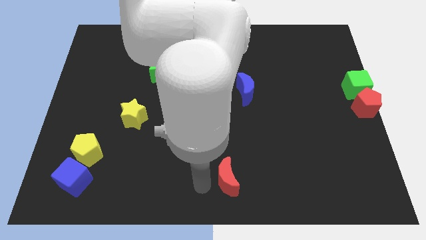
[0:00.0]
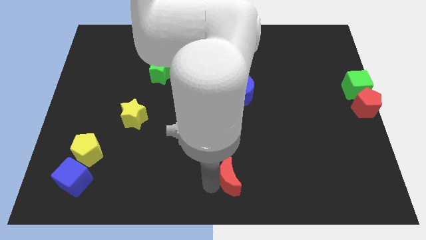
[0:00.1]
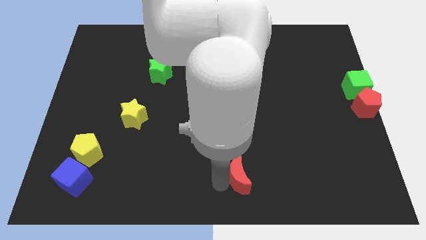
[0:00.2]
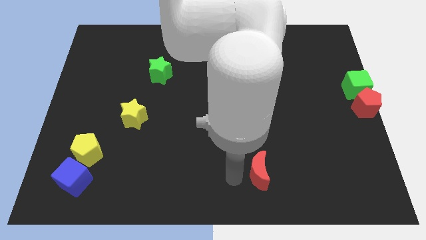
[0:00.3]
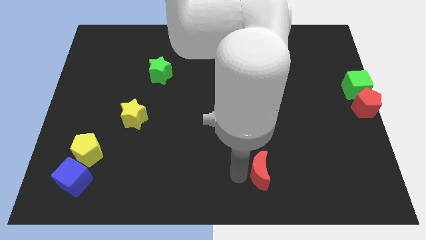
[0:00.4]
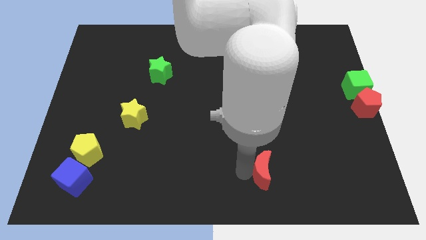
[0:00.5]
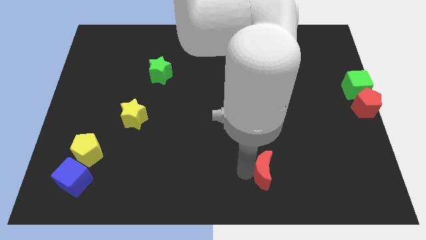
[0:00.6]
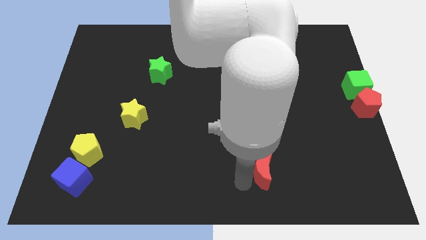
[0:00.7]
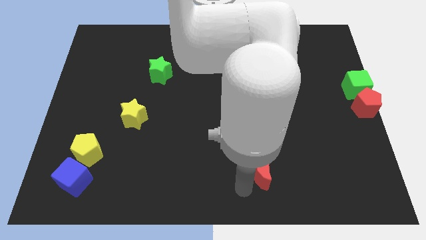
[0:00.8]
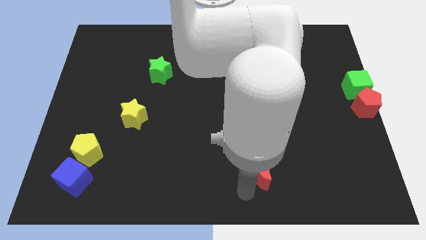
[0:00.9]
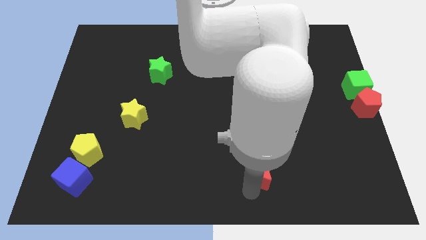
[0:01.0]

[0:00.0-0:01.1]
place the red moon below the blue moon

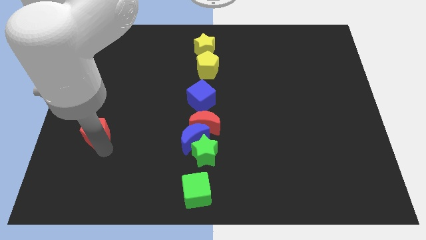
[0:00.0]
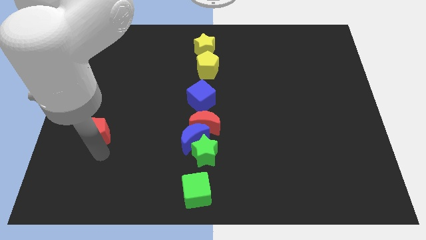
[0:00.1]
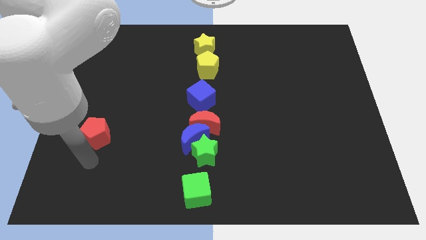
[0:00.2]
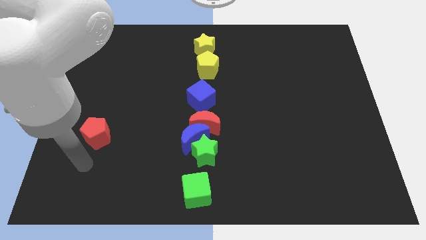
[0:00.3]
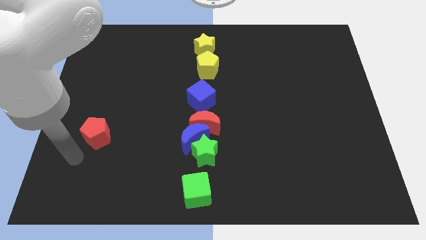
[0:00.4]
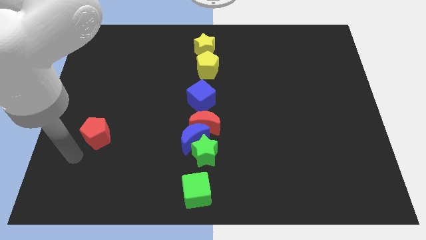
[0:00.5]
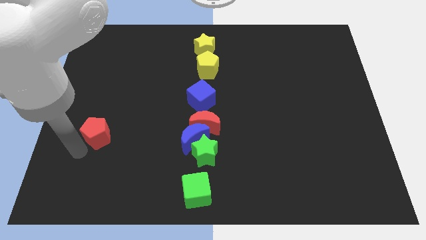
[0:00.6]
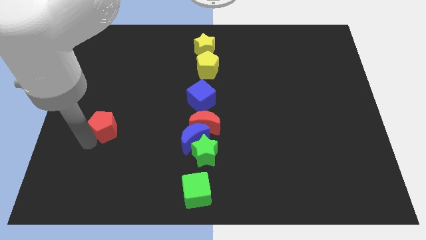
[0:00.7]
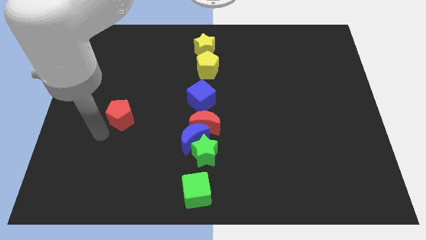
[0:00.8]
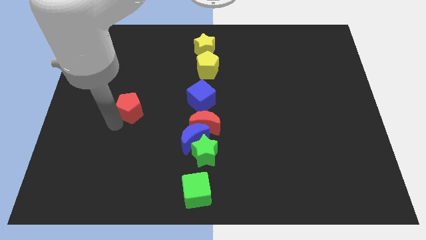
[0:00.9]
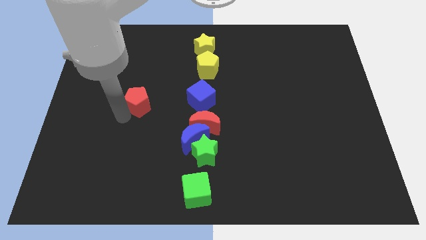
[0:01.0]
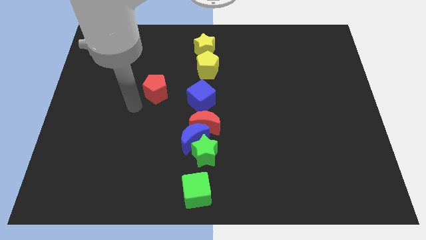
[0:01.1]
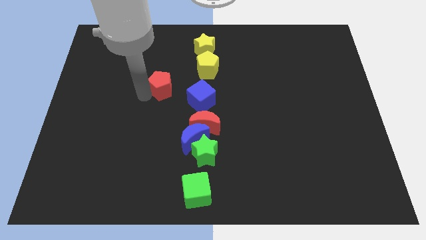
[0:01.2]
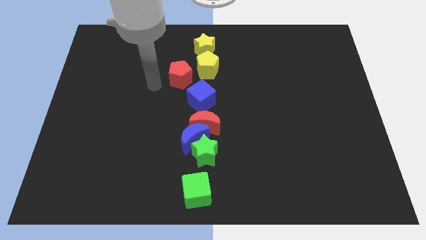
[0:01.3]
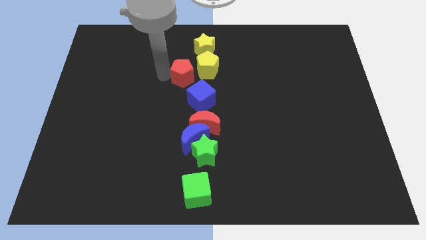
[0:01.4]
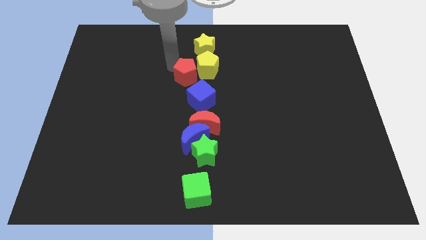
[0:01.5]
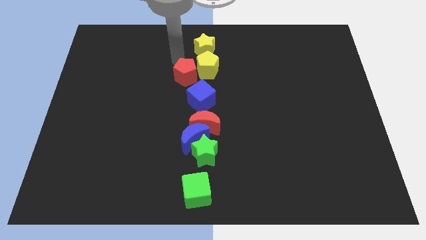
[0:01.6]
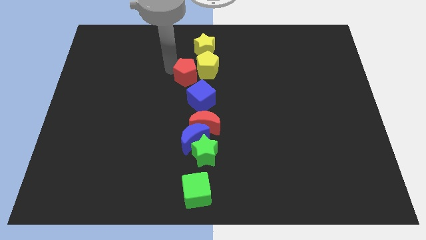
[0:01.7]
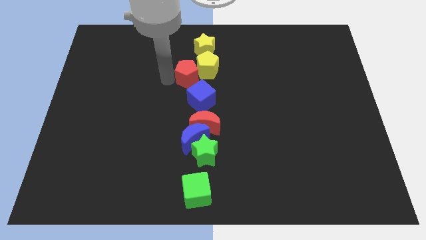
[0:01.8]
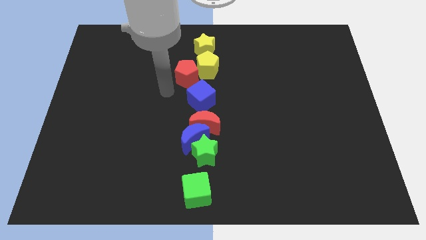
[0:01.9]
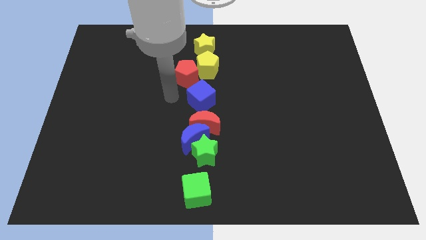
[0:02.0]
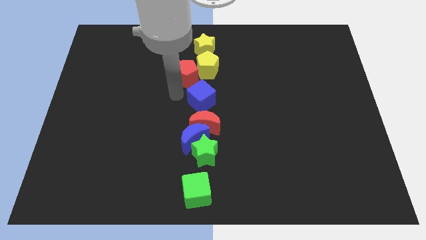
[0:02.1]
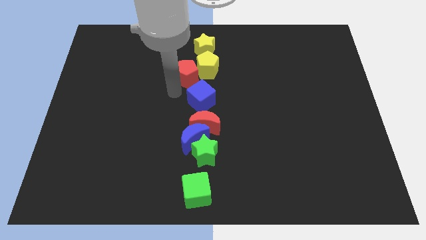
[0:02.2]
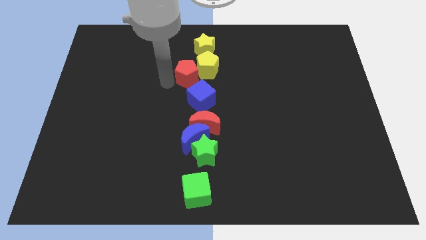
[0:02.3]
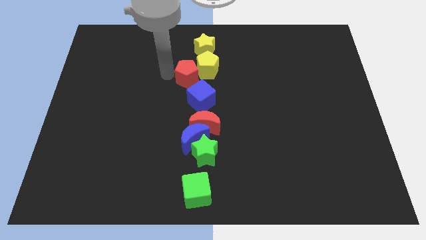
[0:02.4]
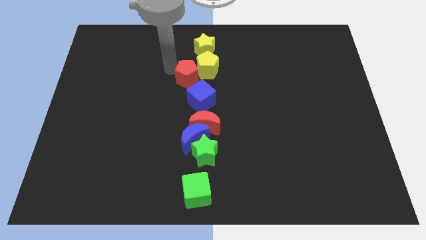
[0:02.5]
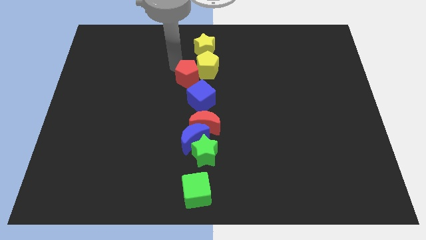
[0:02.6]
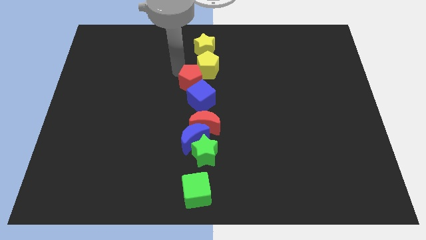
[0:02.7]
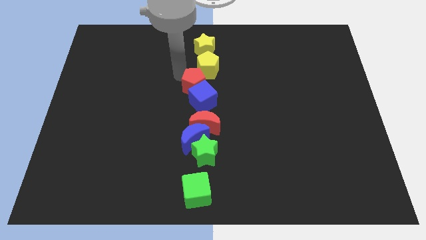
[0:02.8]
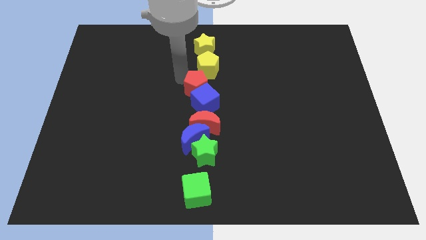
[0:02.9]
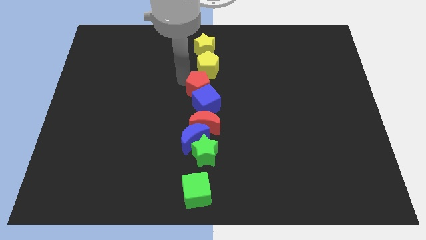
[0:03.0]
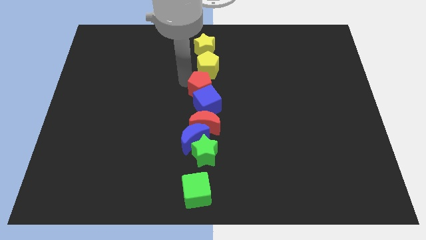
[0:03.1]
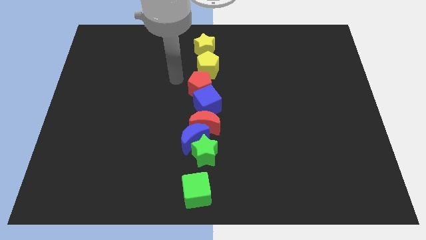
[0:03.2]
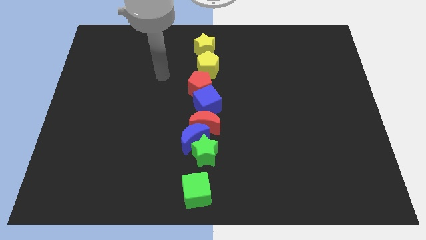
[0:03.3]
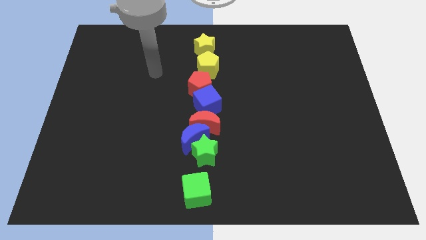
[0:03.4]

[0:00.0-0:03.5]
put the red pentagon at the top left side of the blue cube

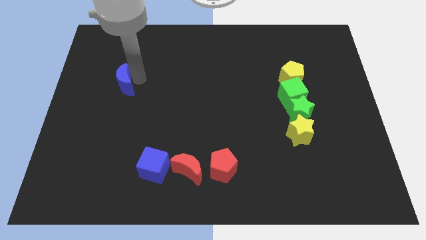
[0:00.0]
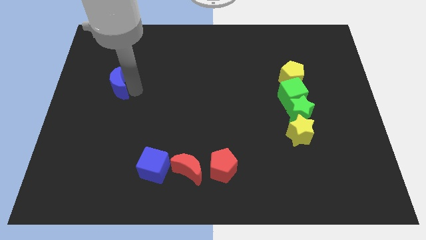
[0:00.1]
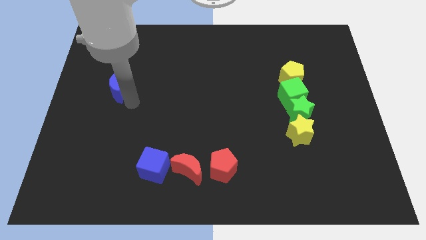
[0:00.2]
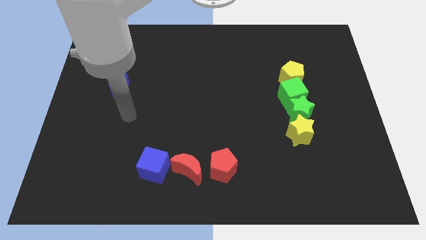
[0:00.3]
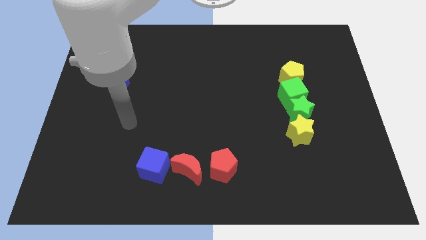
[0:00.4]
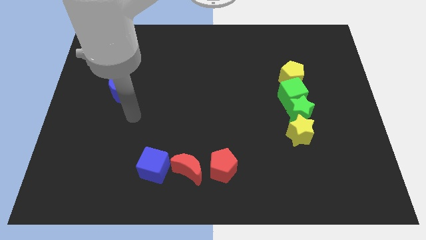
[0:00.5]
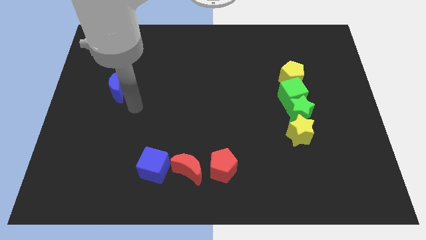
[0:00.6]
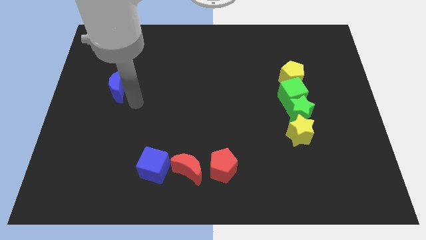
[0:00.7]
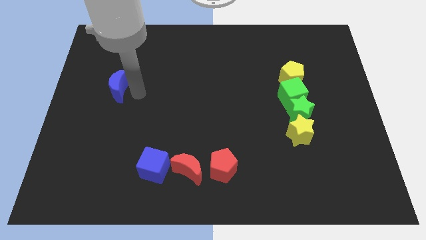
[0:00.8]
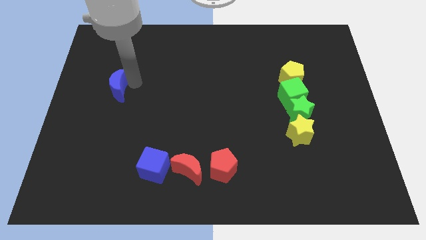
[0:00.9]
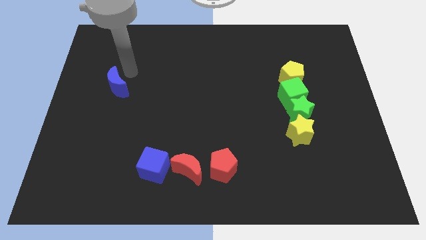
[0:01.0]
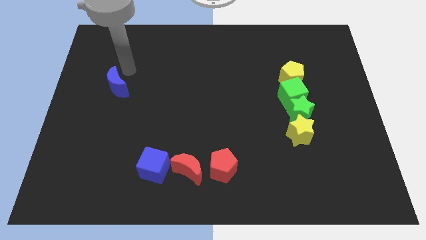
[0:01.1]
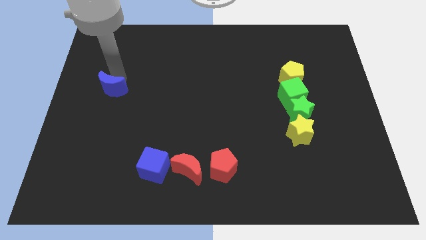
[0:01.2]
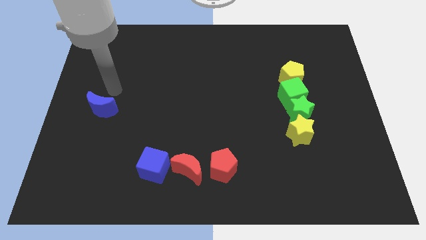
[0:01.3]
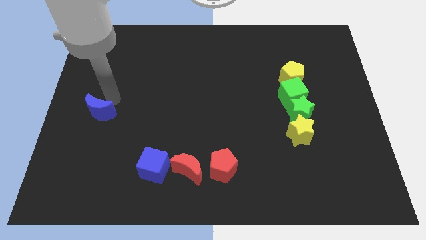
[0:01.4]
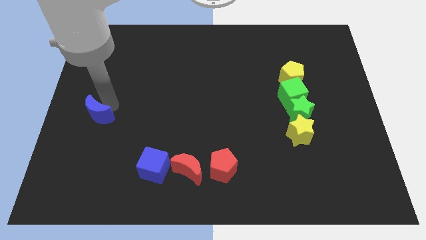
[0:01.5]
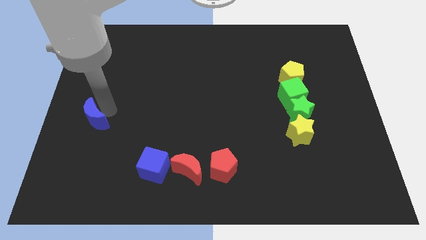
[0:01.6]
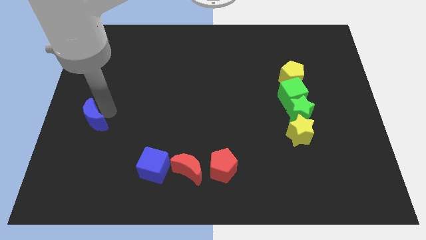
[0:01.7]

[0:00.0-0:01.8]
push the blue crescent to the left side of the table

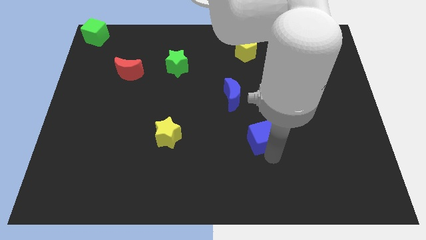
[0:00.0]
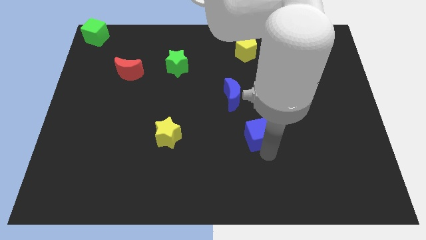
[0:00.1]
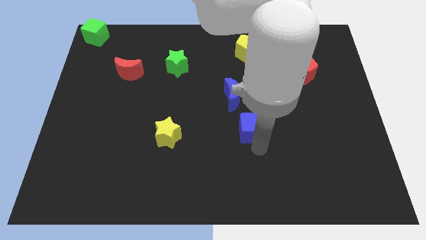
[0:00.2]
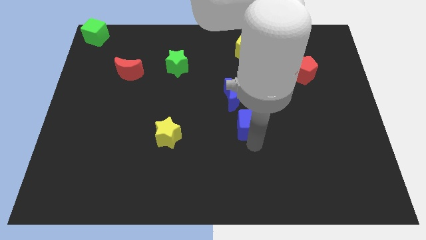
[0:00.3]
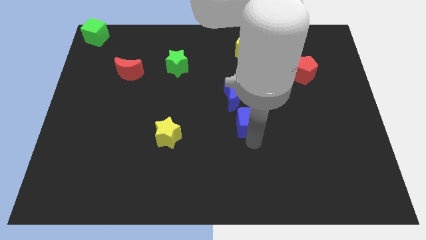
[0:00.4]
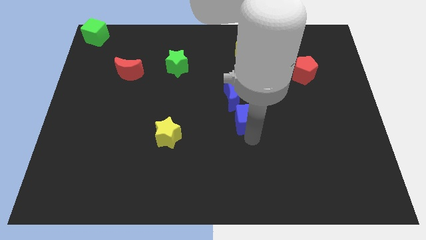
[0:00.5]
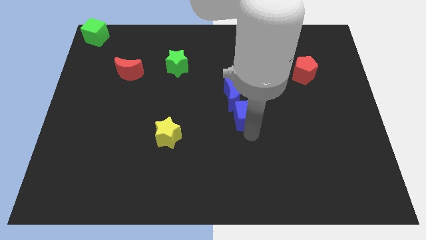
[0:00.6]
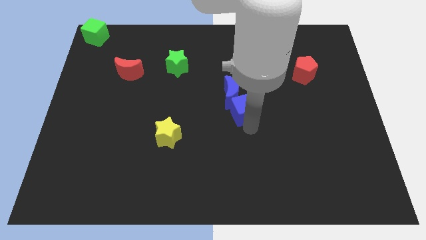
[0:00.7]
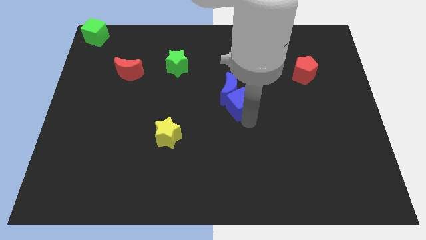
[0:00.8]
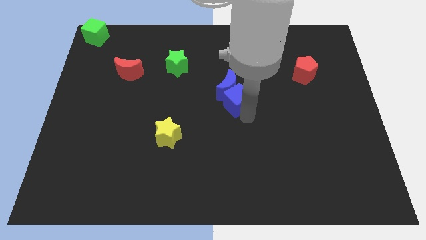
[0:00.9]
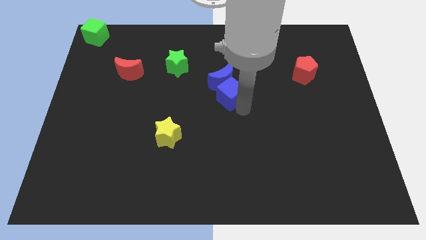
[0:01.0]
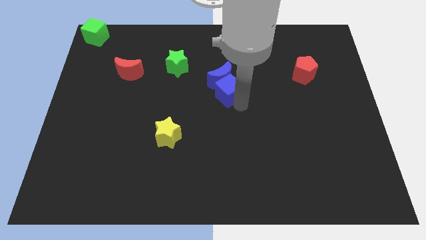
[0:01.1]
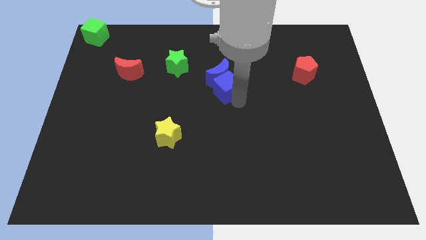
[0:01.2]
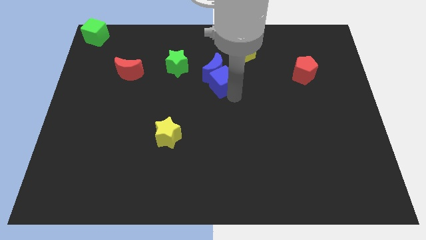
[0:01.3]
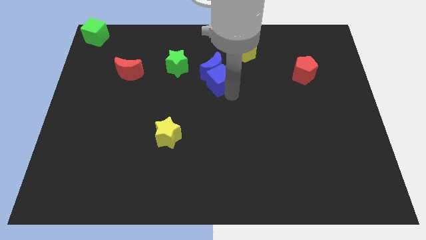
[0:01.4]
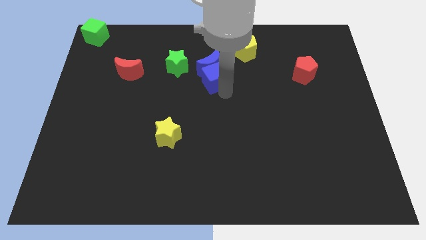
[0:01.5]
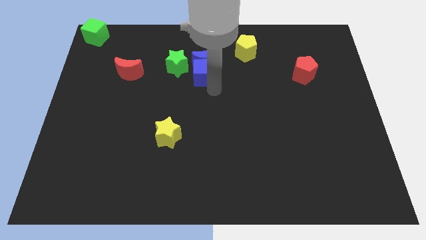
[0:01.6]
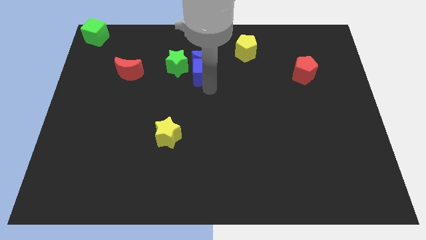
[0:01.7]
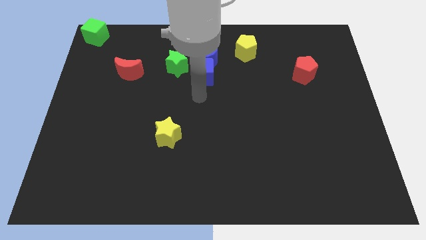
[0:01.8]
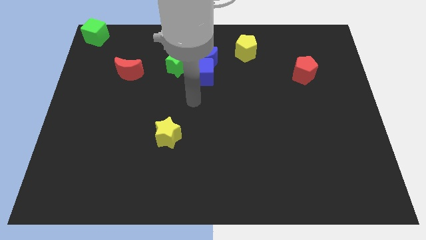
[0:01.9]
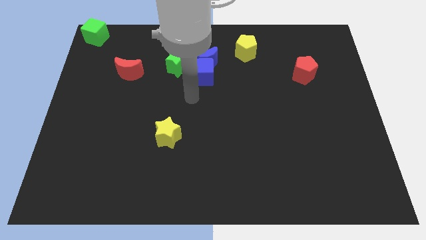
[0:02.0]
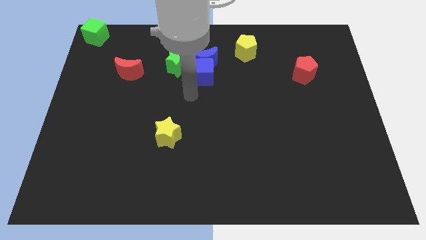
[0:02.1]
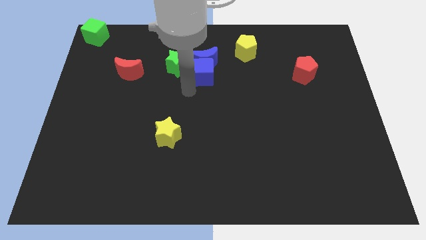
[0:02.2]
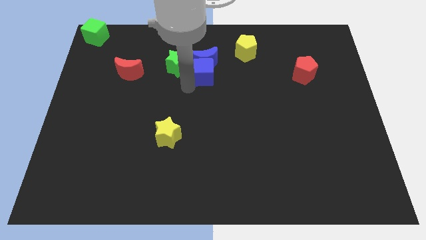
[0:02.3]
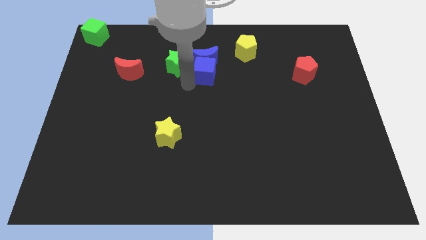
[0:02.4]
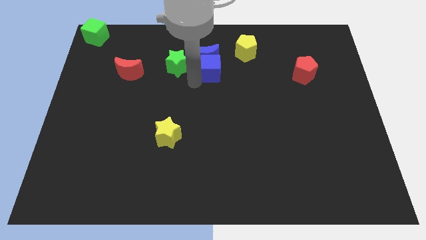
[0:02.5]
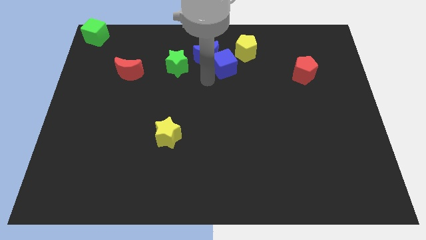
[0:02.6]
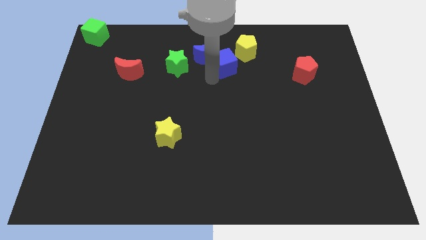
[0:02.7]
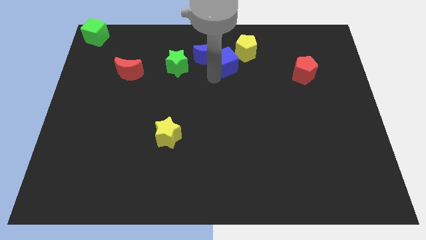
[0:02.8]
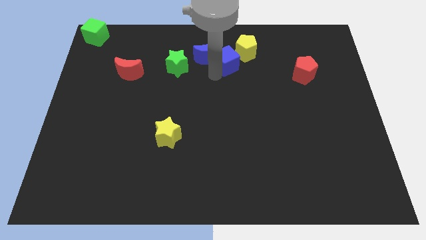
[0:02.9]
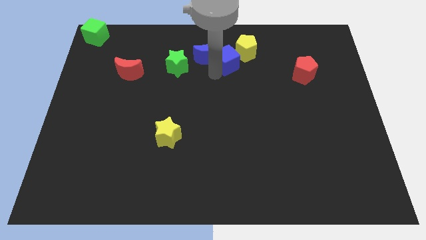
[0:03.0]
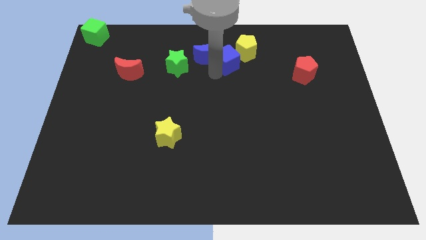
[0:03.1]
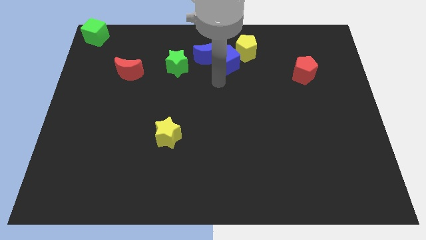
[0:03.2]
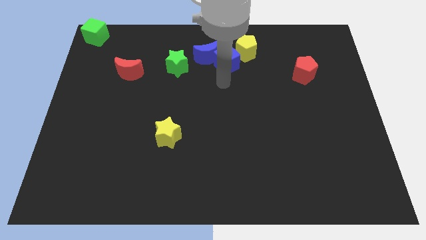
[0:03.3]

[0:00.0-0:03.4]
move blue blocks between the green star and yellow pentagon
